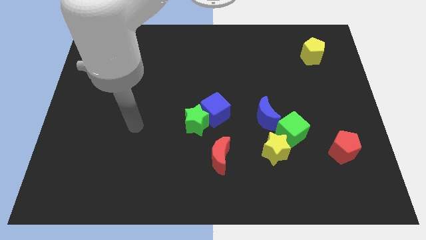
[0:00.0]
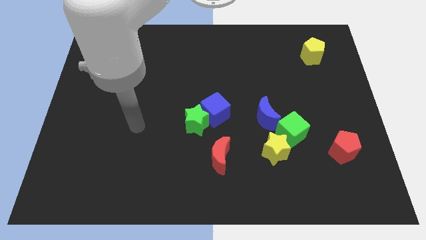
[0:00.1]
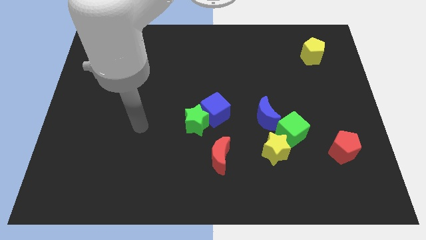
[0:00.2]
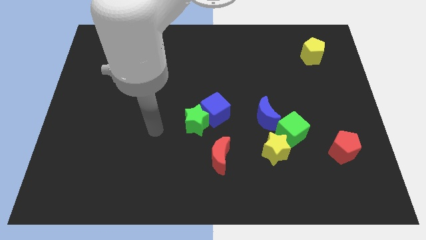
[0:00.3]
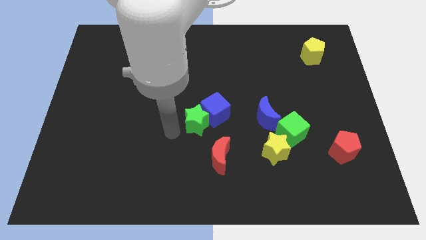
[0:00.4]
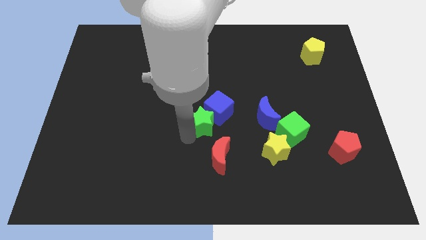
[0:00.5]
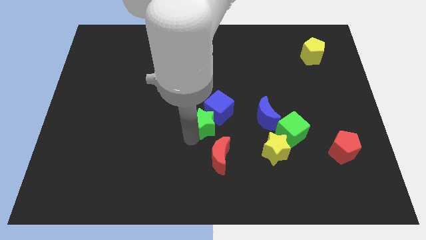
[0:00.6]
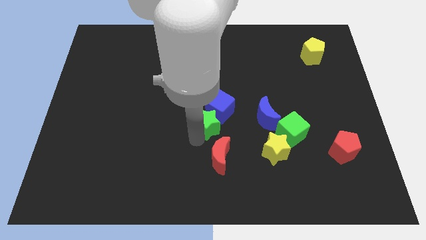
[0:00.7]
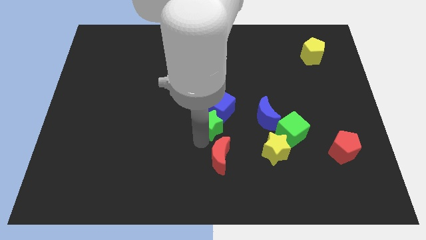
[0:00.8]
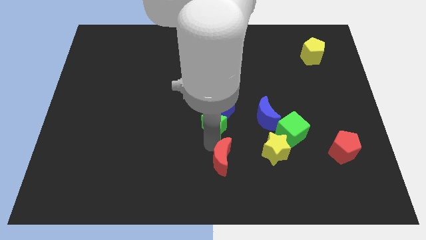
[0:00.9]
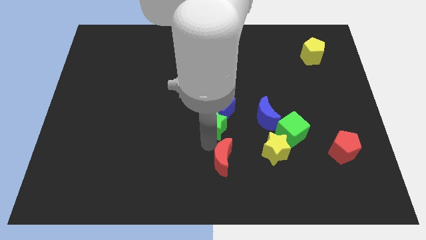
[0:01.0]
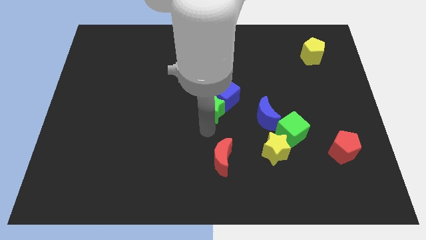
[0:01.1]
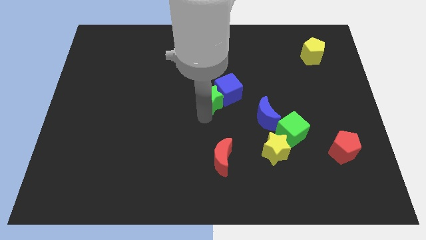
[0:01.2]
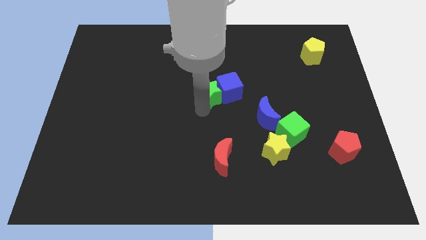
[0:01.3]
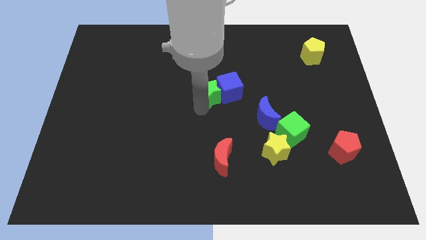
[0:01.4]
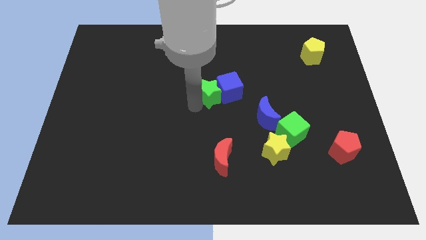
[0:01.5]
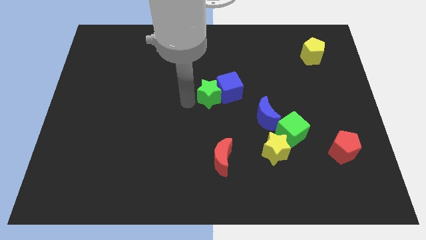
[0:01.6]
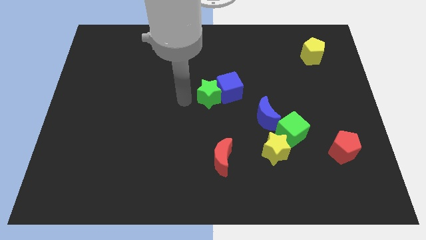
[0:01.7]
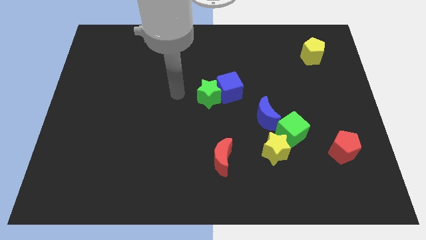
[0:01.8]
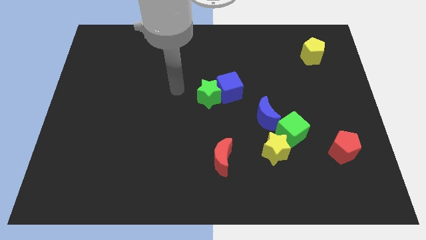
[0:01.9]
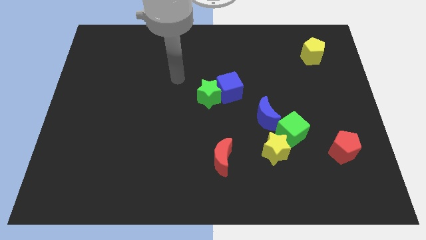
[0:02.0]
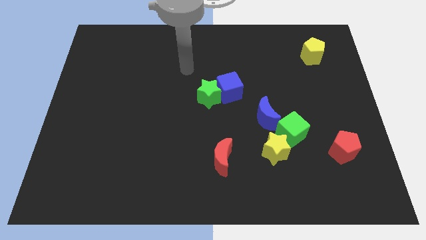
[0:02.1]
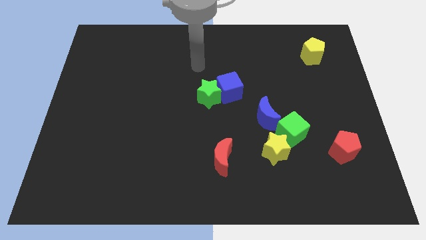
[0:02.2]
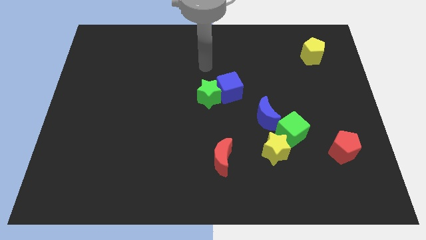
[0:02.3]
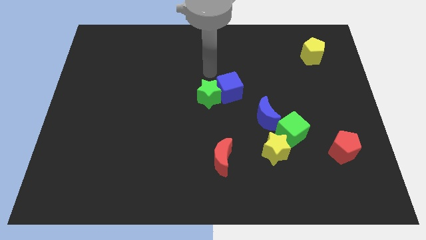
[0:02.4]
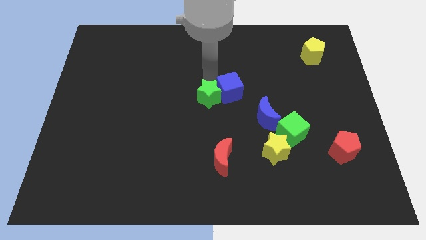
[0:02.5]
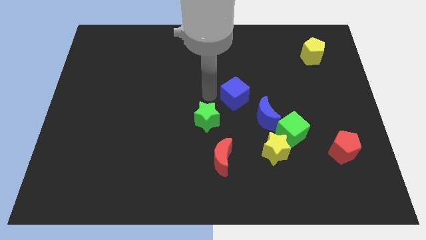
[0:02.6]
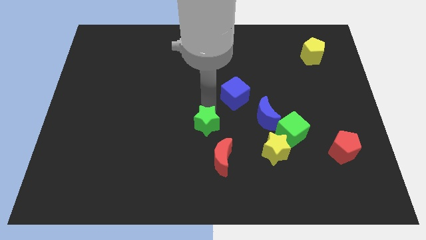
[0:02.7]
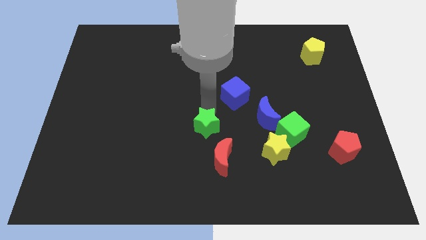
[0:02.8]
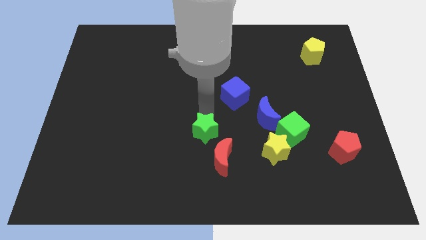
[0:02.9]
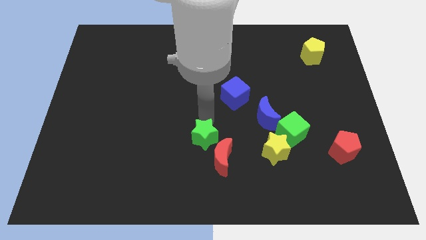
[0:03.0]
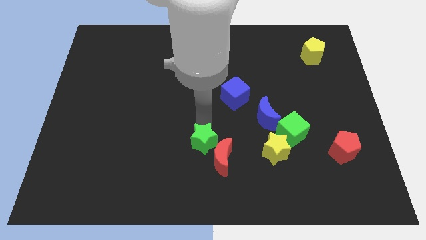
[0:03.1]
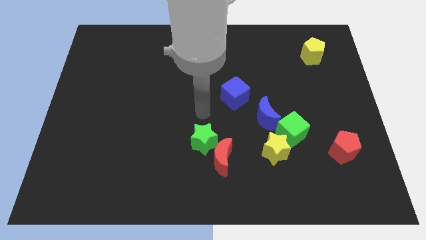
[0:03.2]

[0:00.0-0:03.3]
move the green star to the top left side of the red crescent

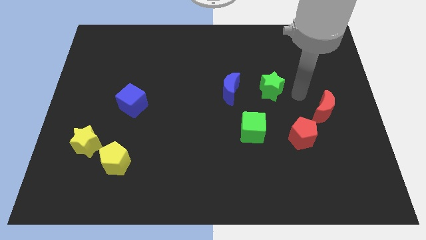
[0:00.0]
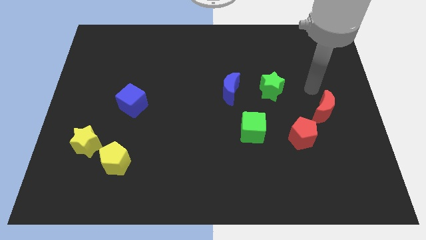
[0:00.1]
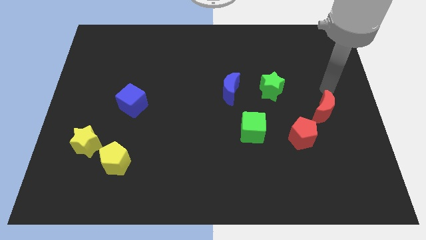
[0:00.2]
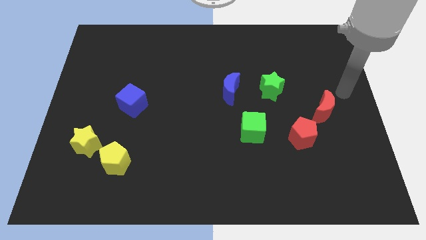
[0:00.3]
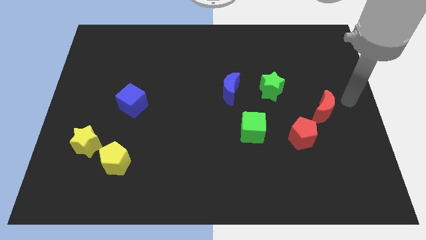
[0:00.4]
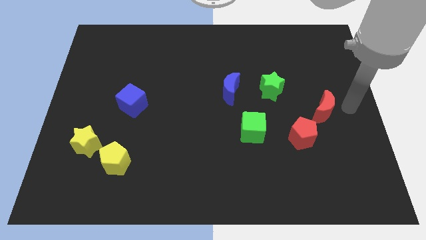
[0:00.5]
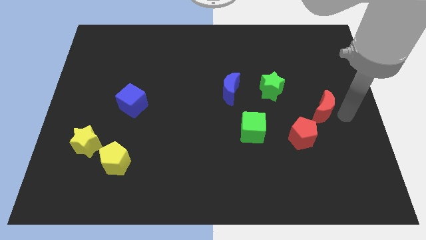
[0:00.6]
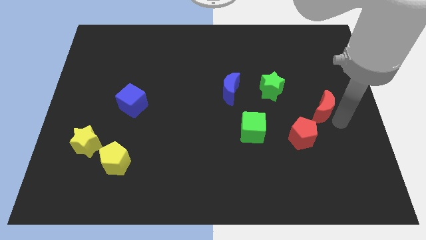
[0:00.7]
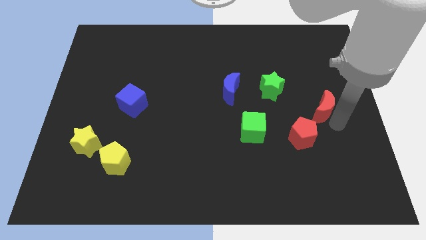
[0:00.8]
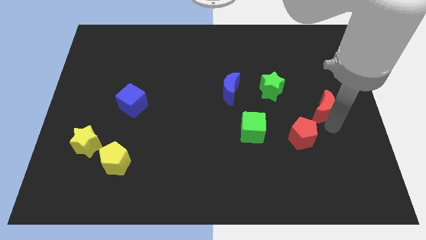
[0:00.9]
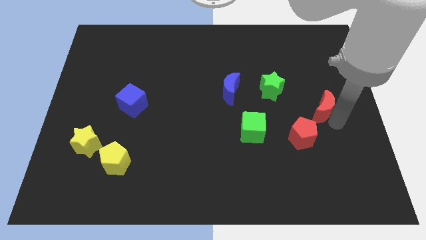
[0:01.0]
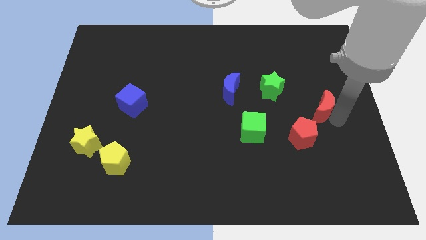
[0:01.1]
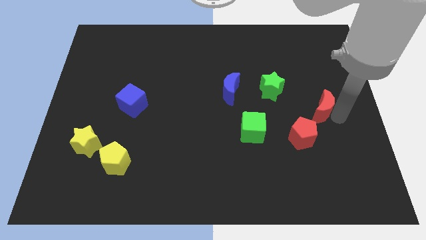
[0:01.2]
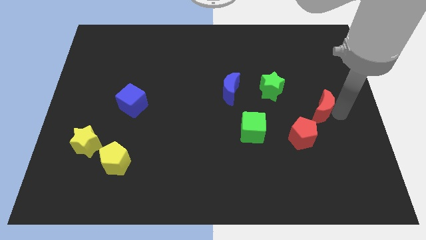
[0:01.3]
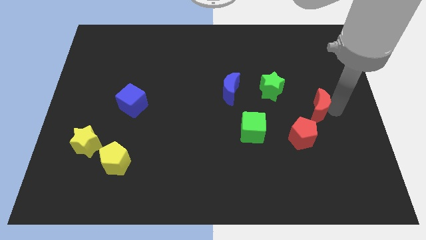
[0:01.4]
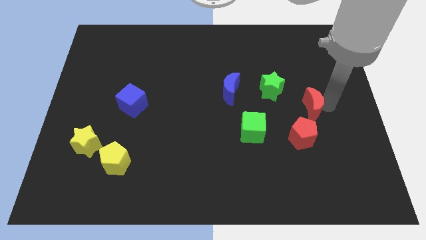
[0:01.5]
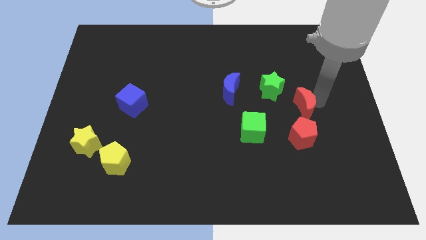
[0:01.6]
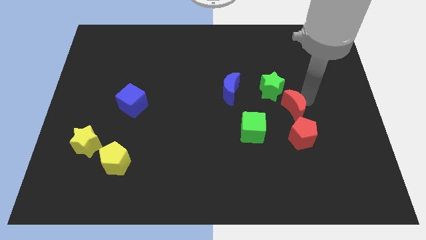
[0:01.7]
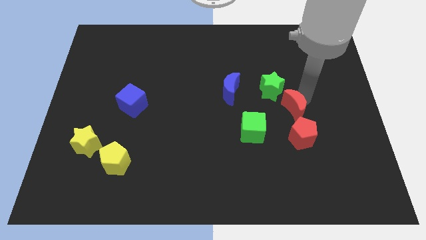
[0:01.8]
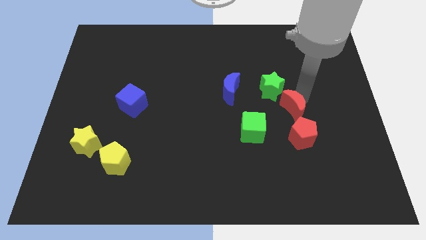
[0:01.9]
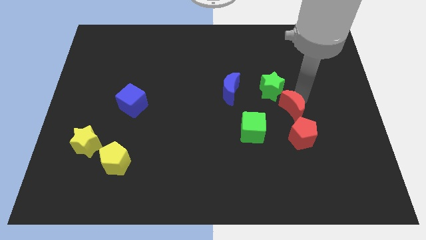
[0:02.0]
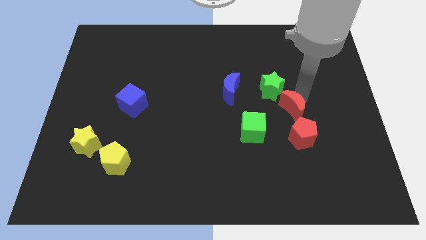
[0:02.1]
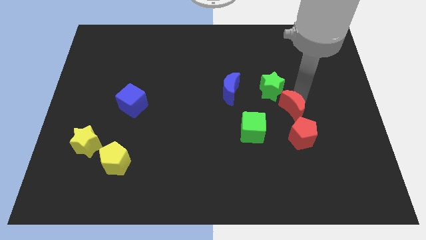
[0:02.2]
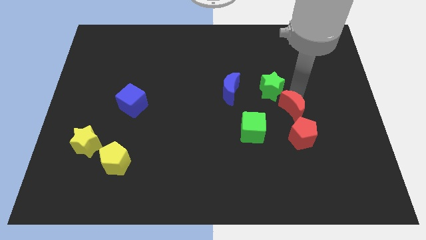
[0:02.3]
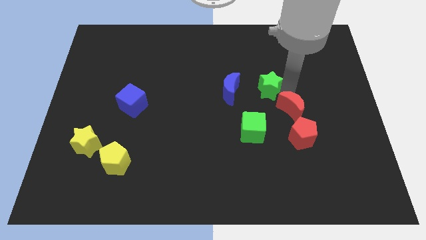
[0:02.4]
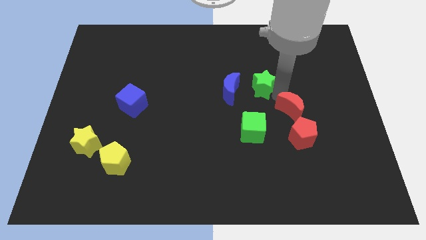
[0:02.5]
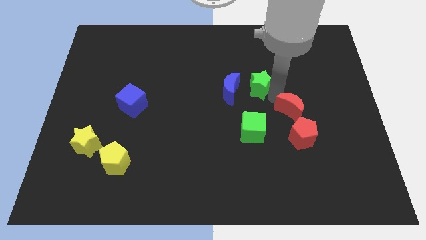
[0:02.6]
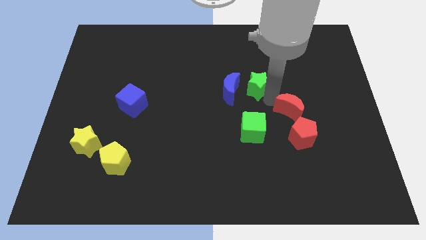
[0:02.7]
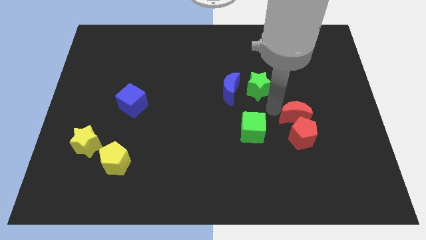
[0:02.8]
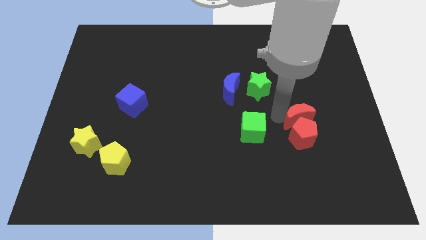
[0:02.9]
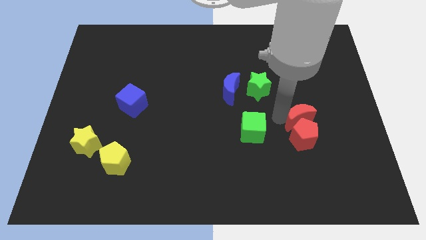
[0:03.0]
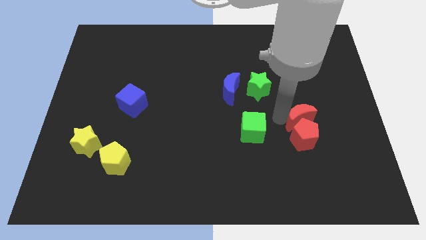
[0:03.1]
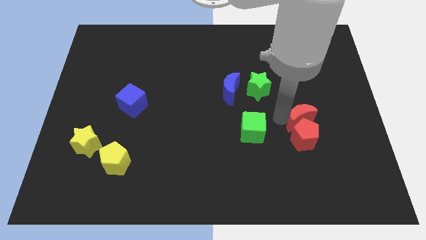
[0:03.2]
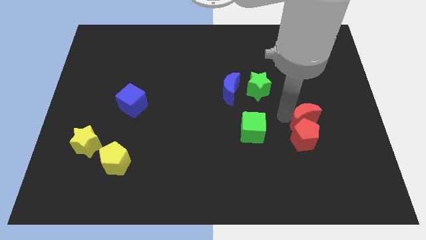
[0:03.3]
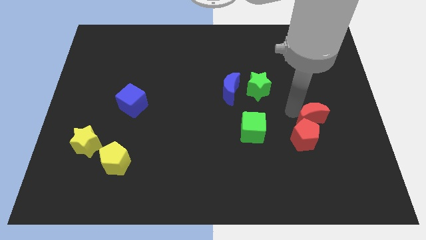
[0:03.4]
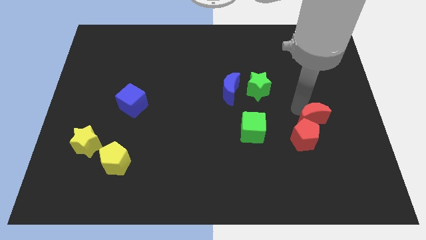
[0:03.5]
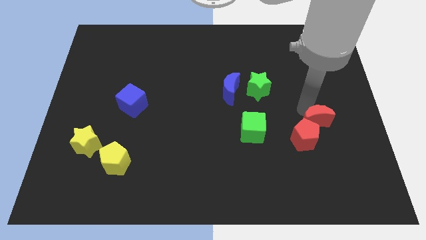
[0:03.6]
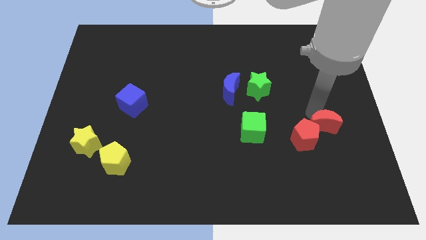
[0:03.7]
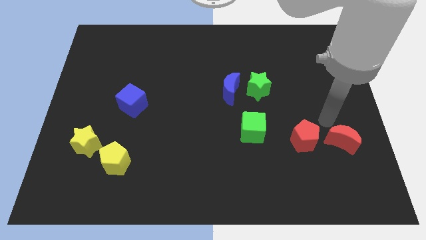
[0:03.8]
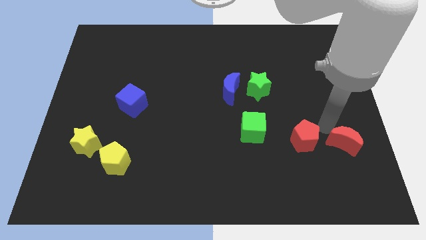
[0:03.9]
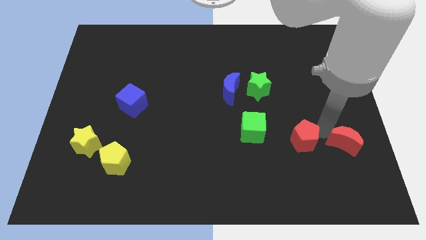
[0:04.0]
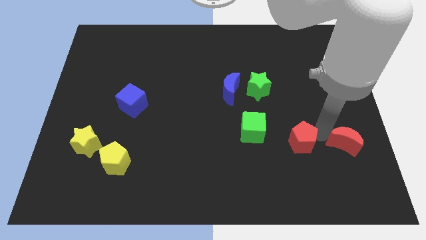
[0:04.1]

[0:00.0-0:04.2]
move the red crescent to the right of the red pentagon

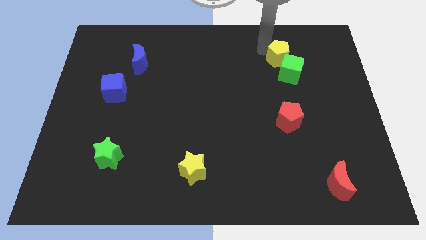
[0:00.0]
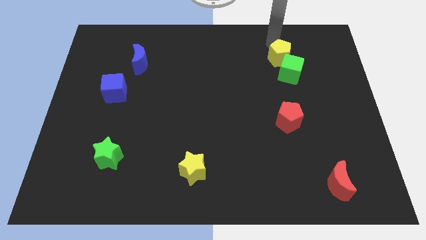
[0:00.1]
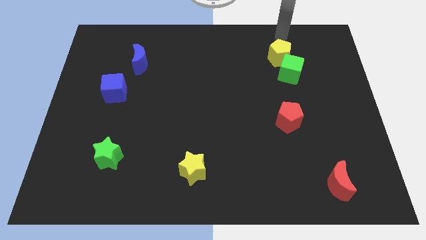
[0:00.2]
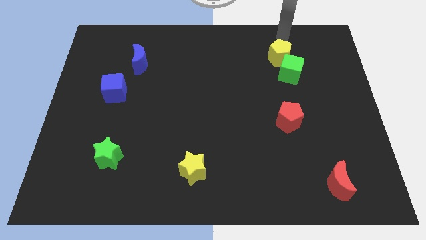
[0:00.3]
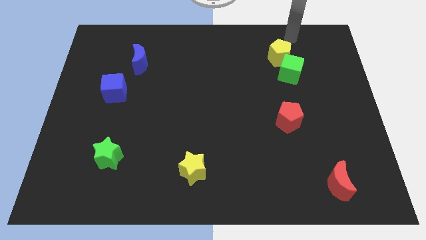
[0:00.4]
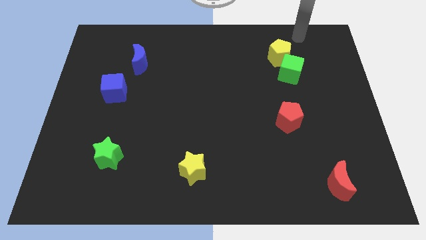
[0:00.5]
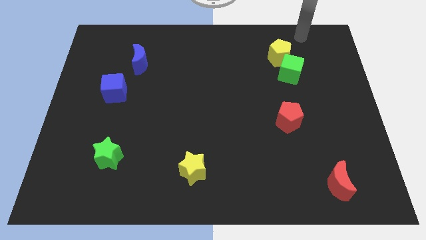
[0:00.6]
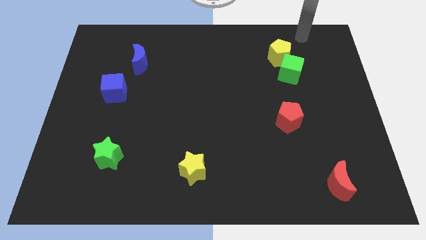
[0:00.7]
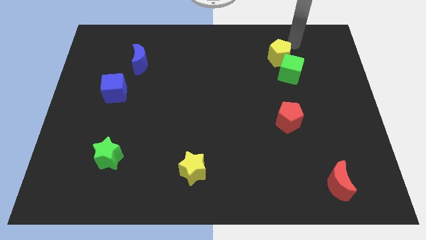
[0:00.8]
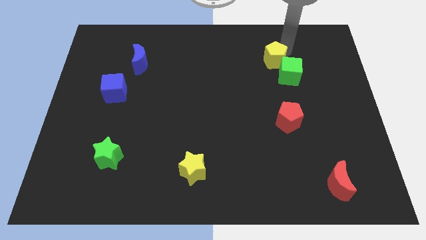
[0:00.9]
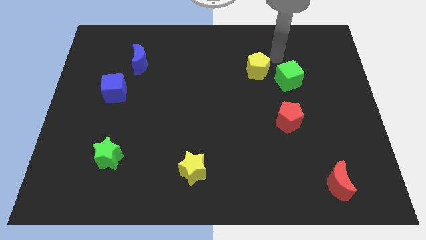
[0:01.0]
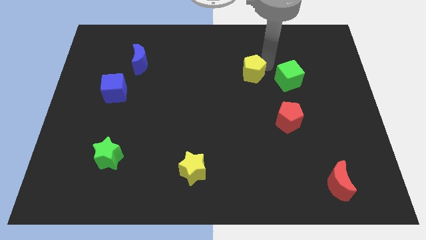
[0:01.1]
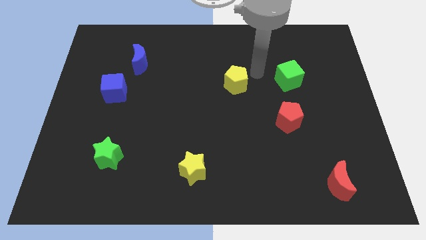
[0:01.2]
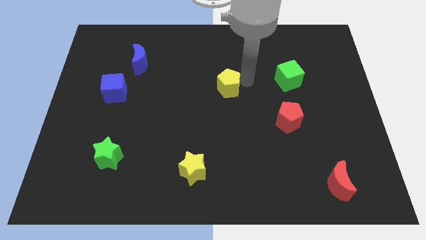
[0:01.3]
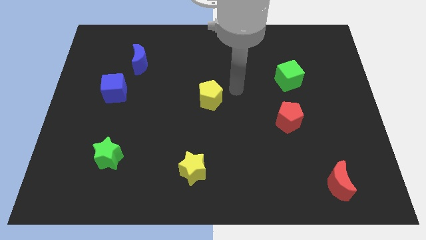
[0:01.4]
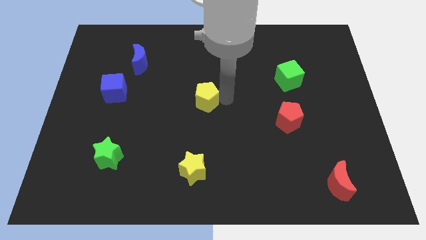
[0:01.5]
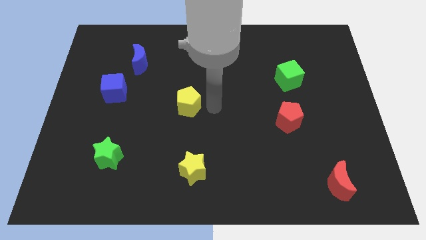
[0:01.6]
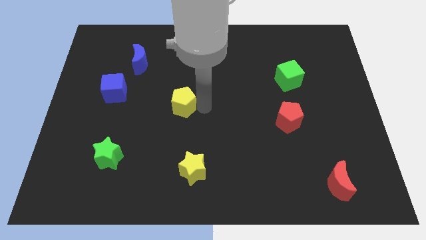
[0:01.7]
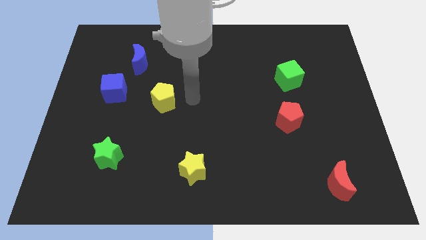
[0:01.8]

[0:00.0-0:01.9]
separate the yellow pentagon to the right of blue cube
